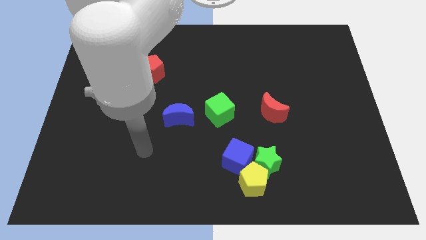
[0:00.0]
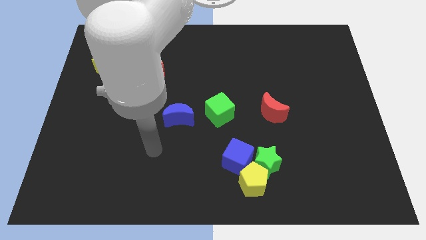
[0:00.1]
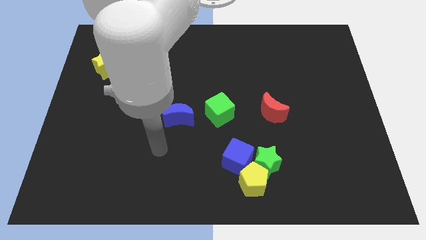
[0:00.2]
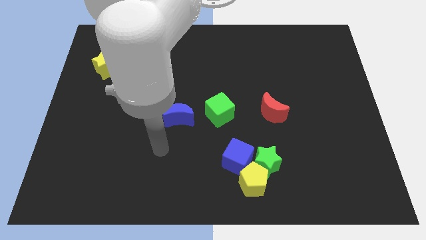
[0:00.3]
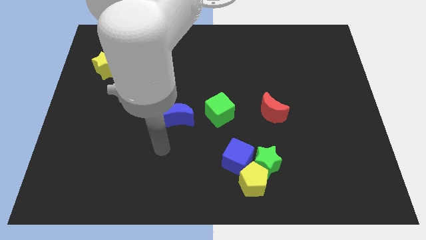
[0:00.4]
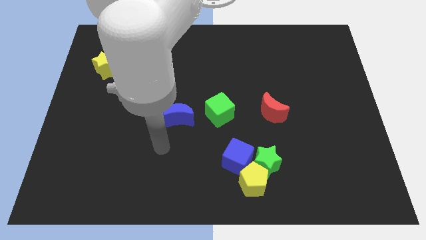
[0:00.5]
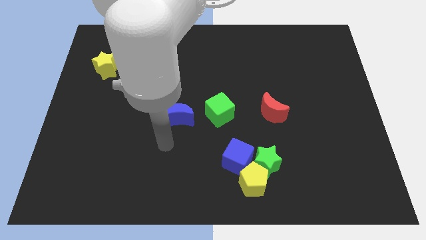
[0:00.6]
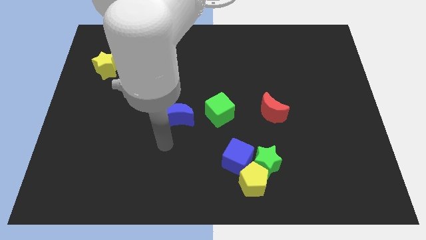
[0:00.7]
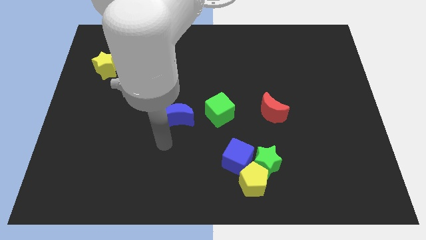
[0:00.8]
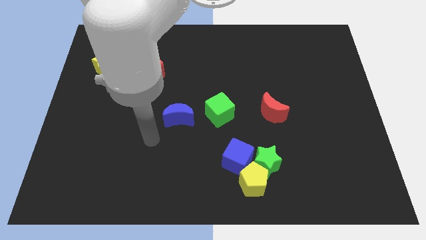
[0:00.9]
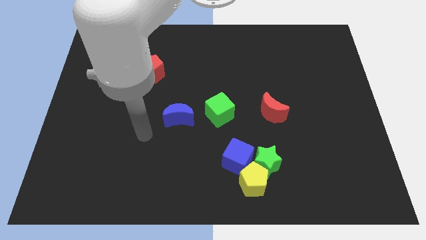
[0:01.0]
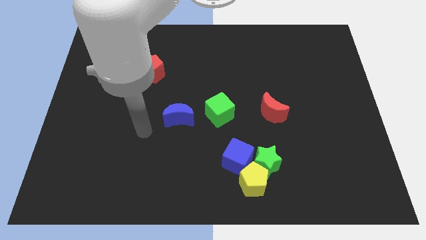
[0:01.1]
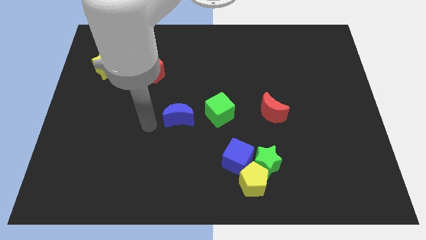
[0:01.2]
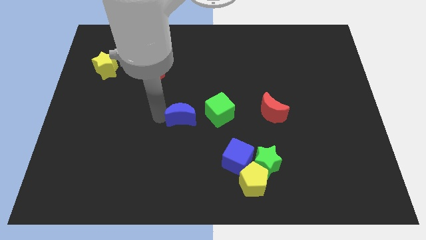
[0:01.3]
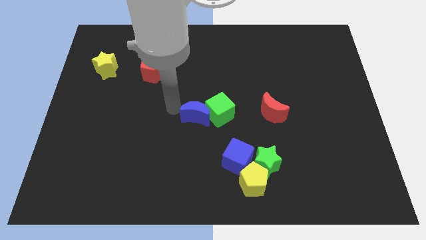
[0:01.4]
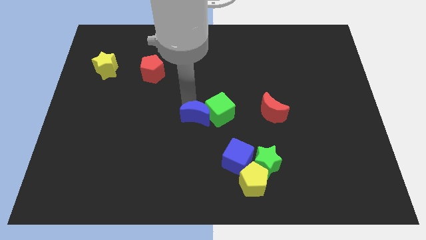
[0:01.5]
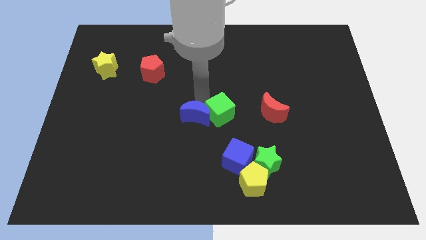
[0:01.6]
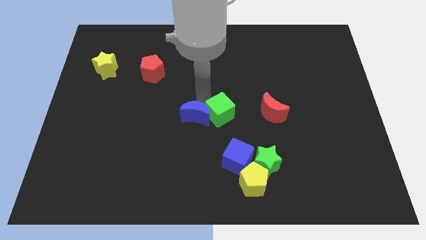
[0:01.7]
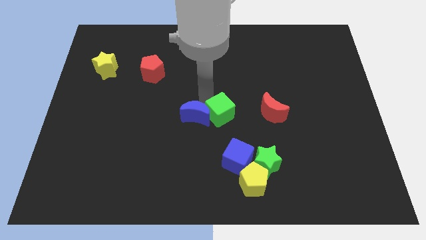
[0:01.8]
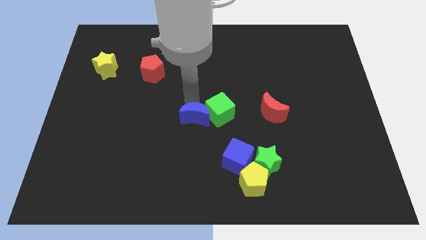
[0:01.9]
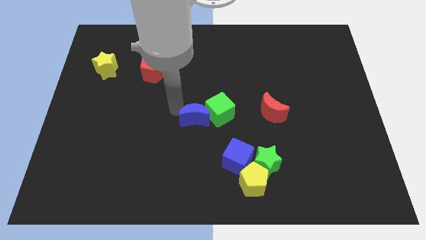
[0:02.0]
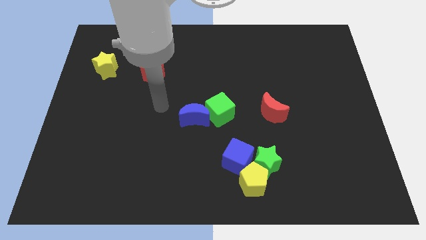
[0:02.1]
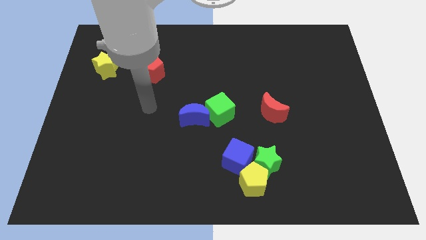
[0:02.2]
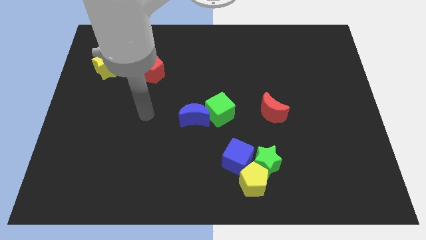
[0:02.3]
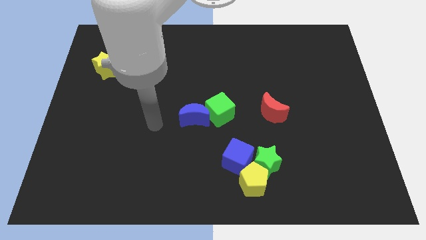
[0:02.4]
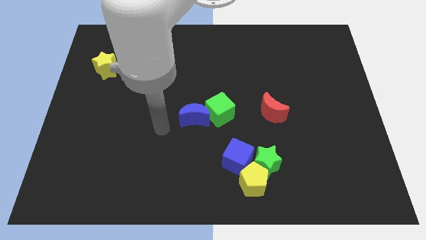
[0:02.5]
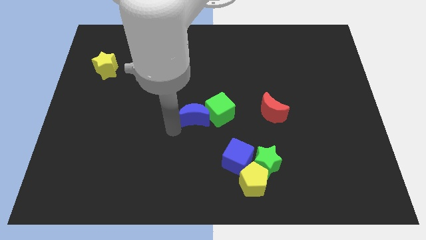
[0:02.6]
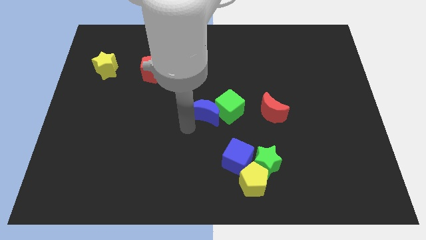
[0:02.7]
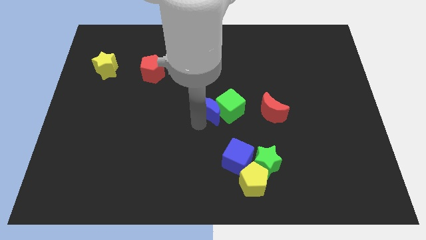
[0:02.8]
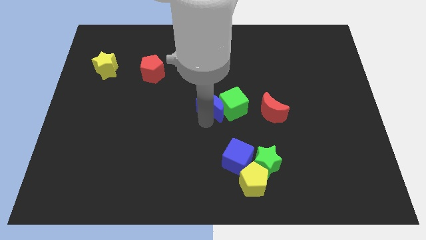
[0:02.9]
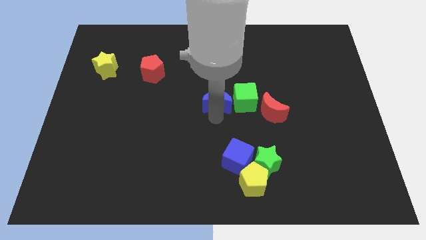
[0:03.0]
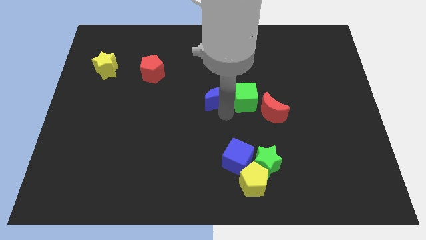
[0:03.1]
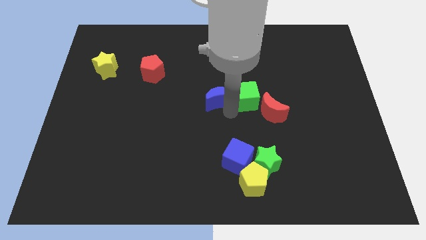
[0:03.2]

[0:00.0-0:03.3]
push the blue moon with green cube to the left of red moon

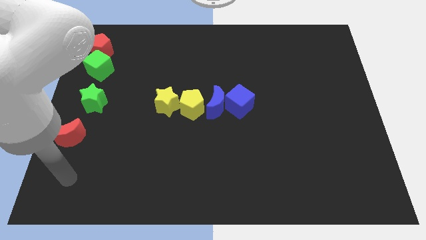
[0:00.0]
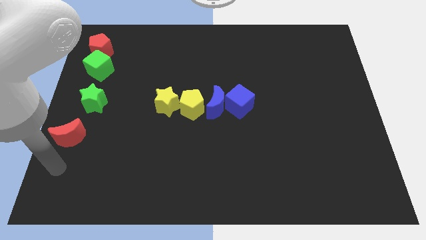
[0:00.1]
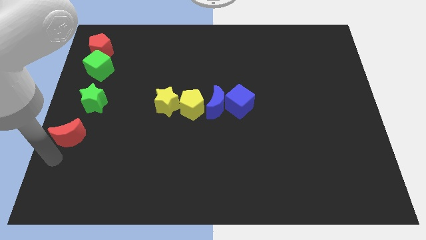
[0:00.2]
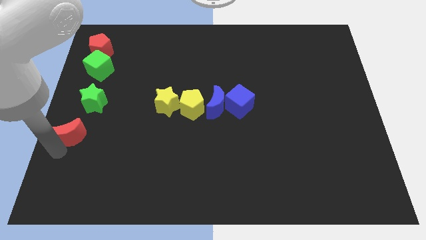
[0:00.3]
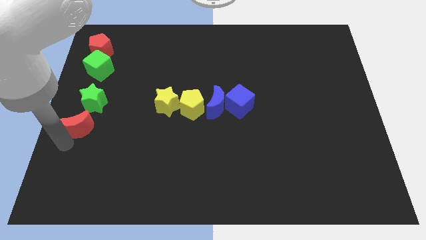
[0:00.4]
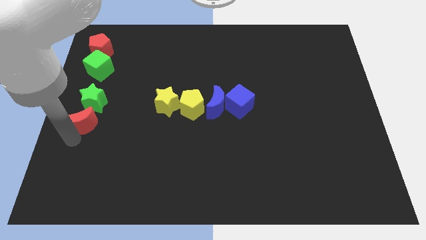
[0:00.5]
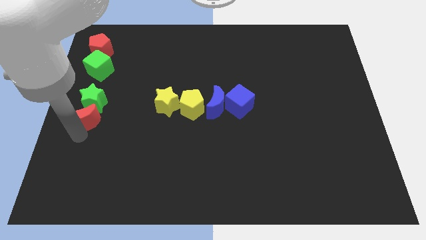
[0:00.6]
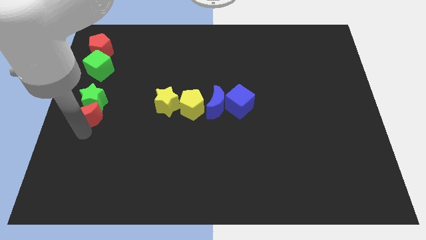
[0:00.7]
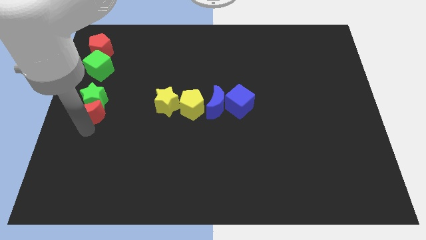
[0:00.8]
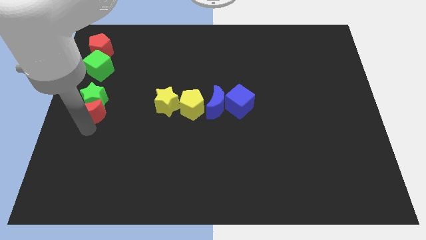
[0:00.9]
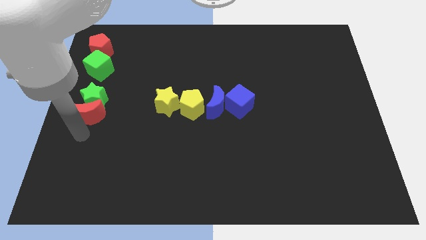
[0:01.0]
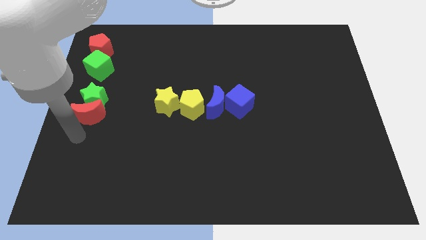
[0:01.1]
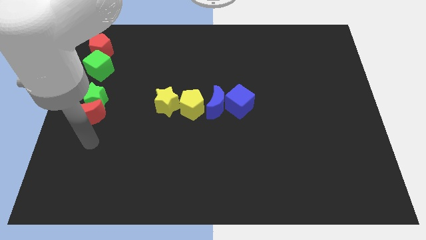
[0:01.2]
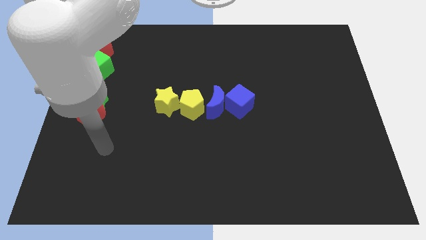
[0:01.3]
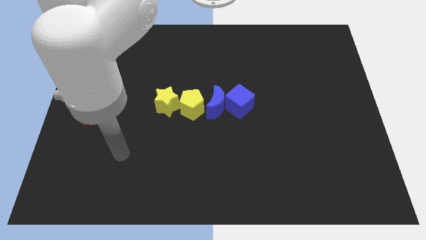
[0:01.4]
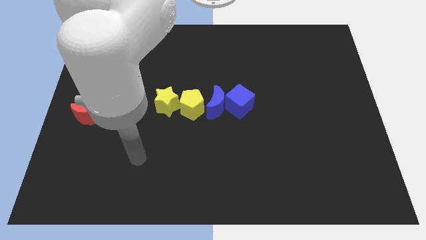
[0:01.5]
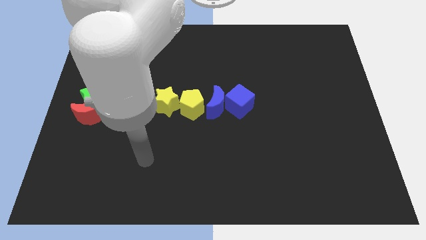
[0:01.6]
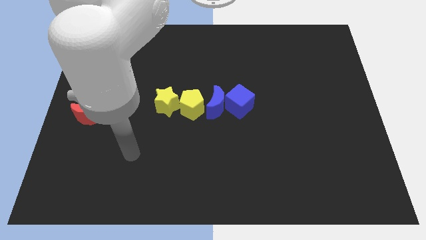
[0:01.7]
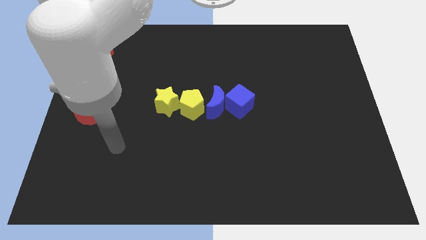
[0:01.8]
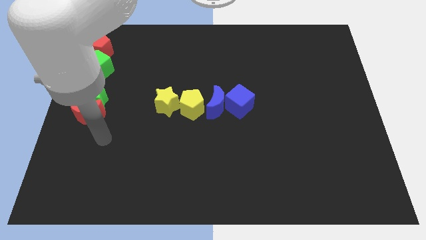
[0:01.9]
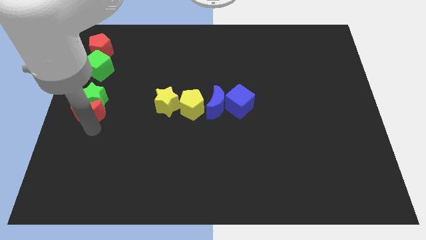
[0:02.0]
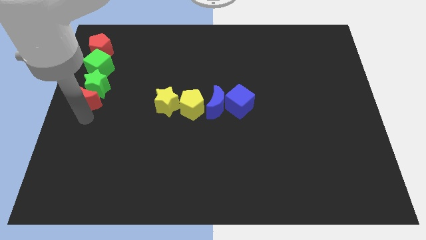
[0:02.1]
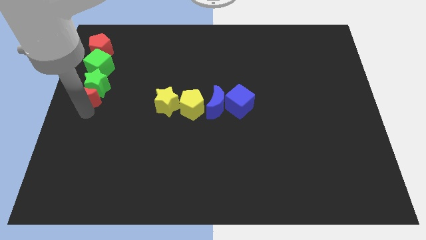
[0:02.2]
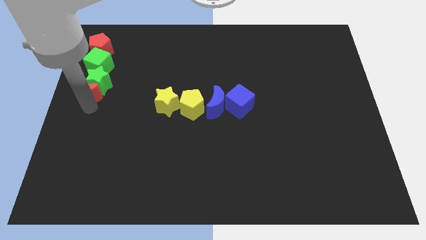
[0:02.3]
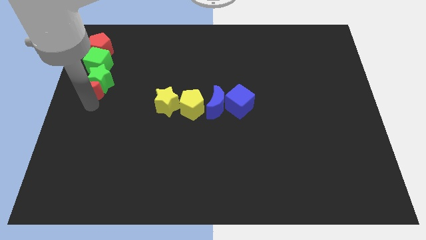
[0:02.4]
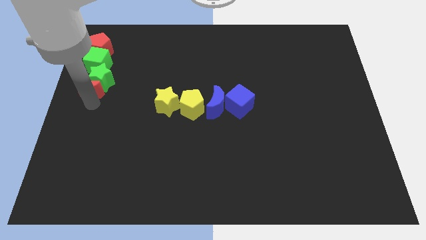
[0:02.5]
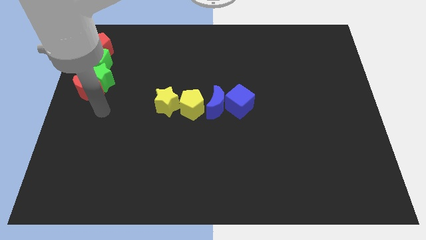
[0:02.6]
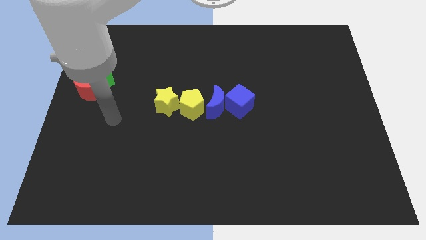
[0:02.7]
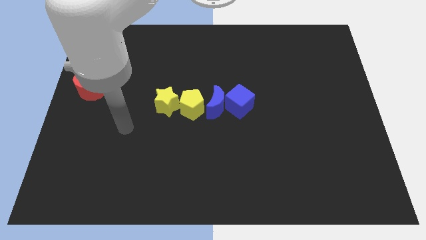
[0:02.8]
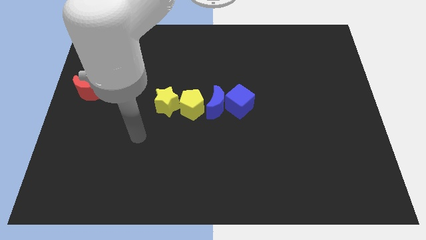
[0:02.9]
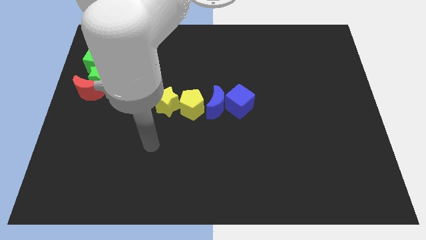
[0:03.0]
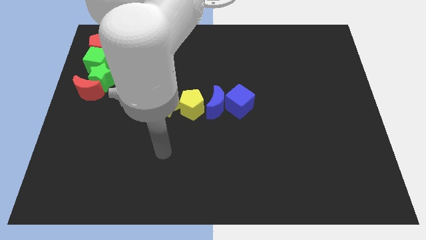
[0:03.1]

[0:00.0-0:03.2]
move the red moon into the green star

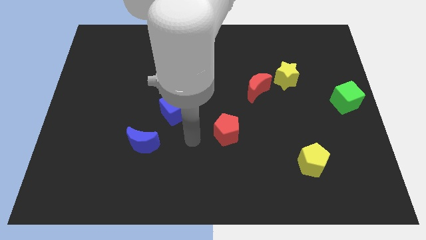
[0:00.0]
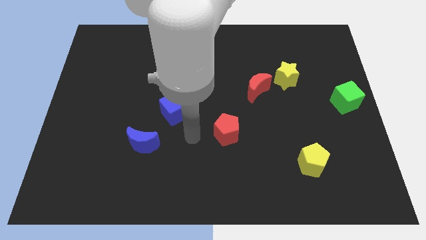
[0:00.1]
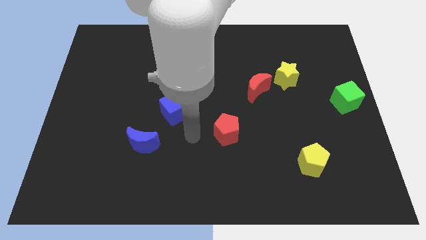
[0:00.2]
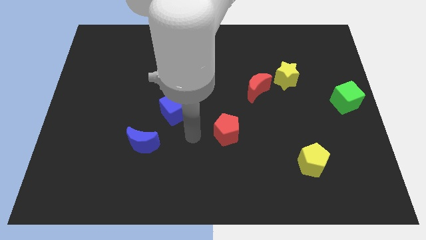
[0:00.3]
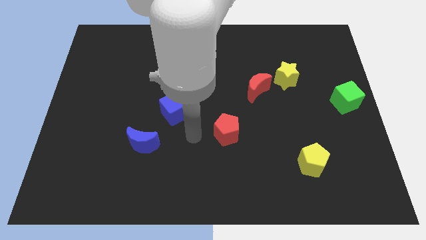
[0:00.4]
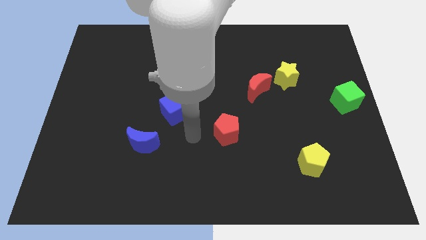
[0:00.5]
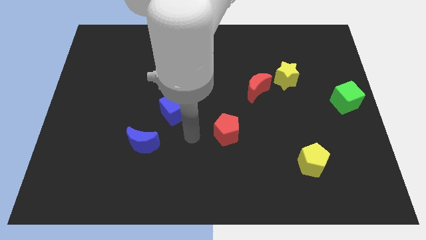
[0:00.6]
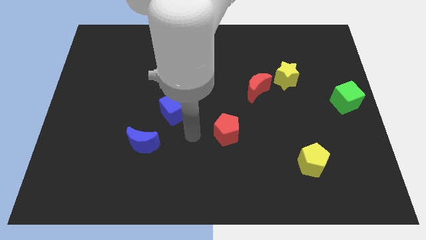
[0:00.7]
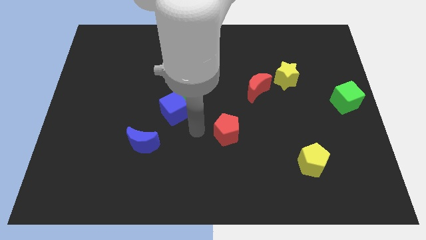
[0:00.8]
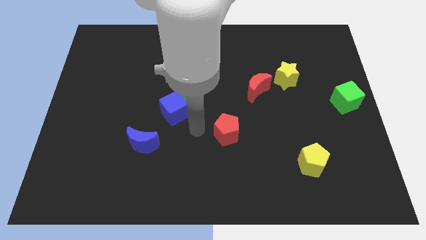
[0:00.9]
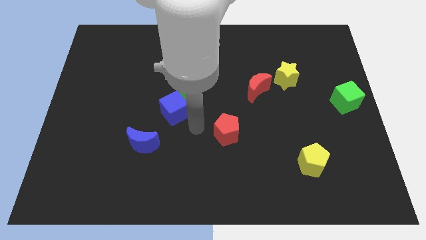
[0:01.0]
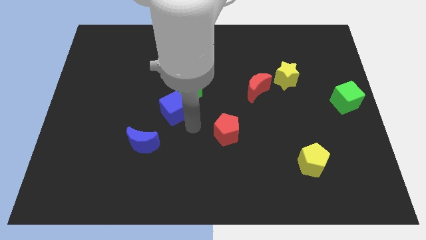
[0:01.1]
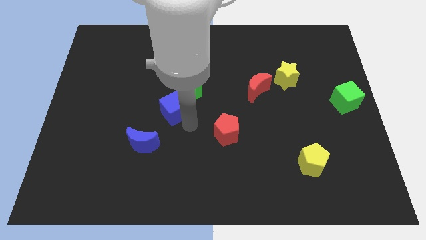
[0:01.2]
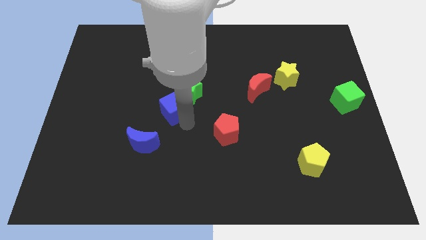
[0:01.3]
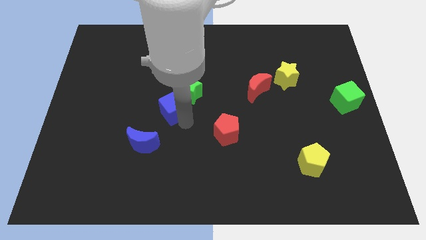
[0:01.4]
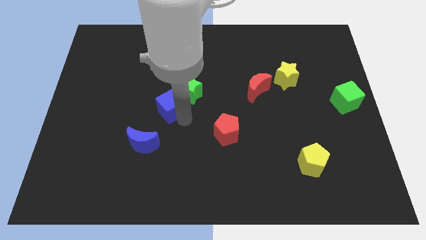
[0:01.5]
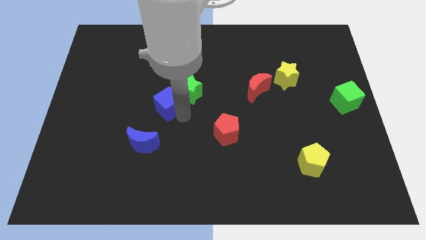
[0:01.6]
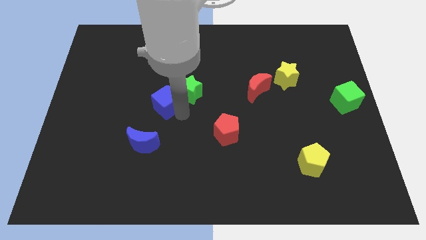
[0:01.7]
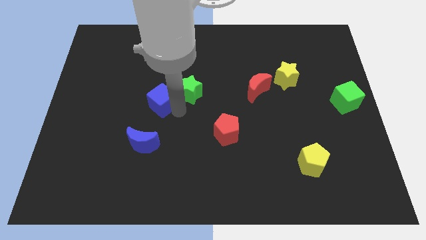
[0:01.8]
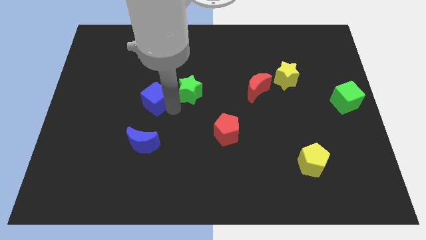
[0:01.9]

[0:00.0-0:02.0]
push the blue cube slightly towards the top left

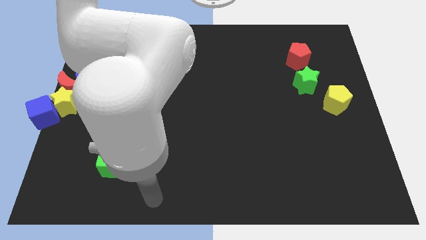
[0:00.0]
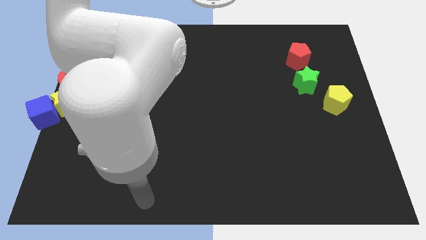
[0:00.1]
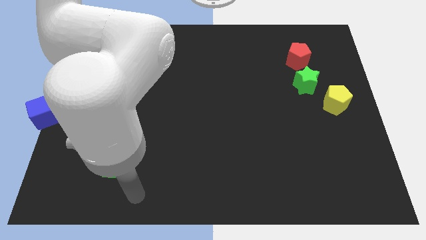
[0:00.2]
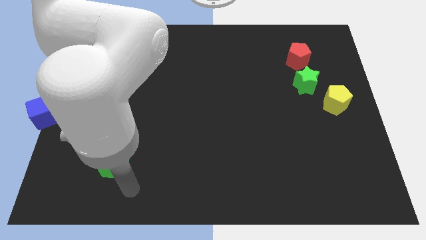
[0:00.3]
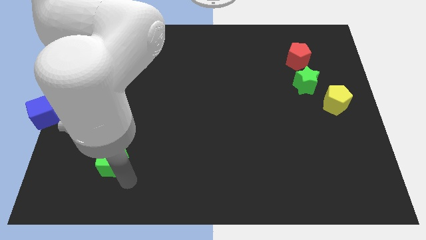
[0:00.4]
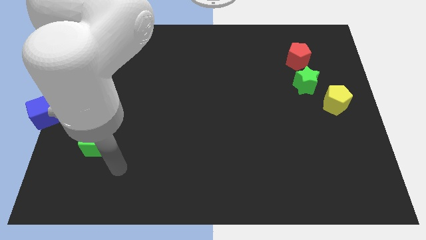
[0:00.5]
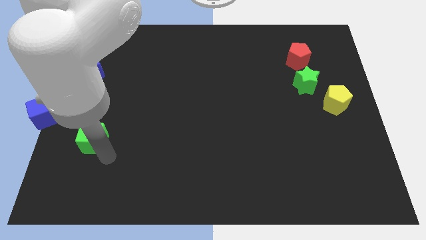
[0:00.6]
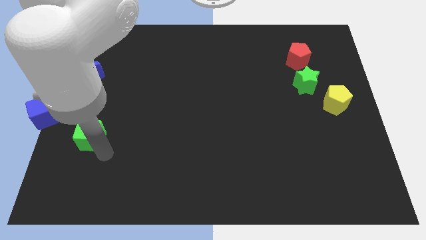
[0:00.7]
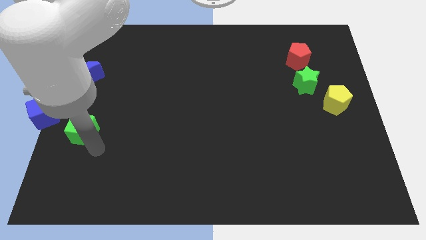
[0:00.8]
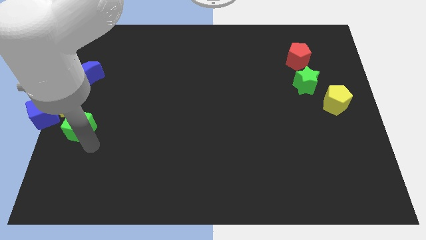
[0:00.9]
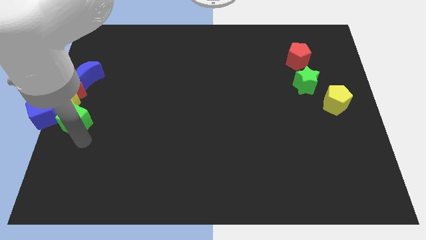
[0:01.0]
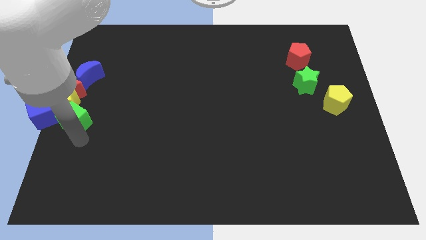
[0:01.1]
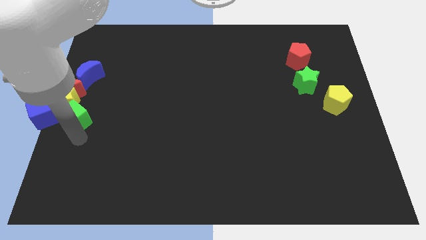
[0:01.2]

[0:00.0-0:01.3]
slide the green cube close to the yellow star
